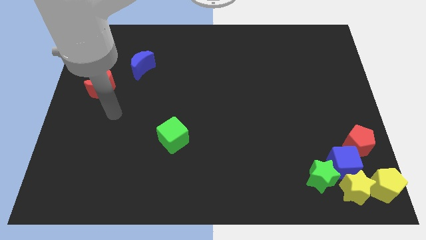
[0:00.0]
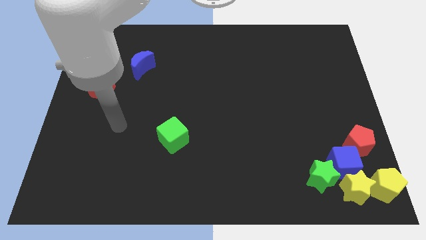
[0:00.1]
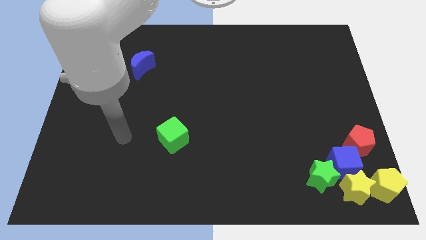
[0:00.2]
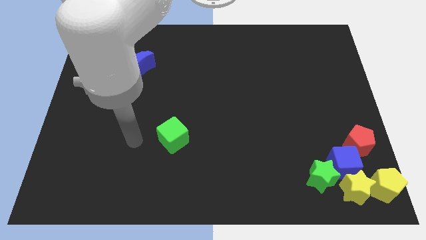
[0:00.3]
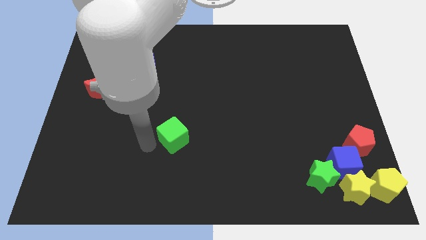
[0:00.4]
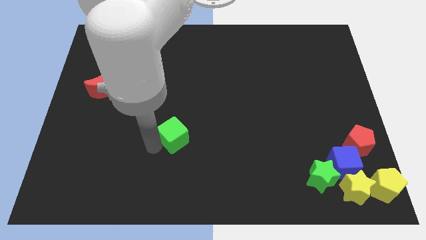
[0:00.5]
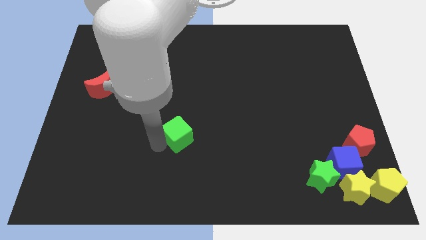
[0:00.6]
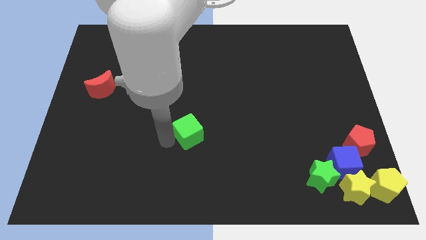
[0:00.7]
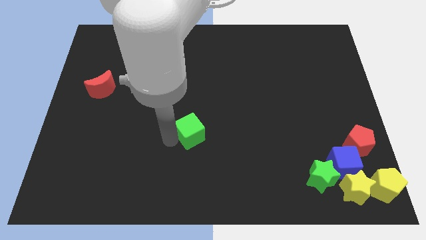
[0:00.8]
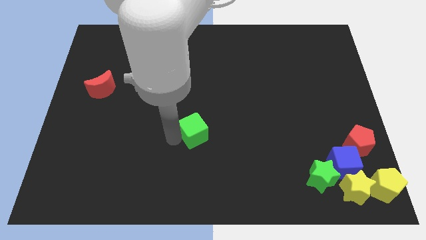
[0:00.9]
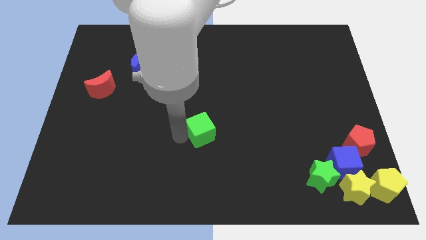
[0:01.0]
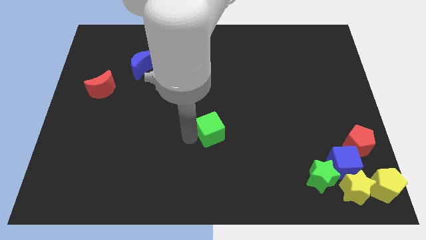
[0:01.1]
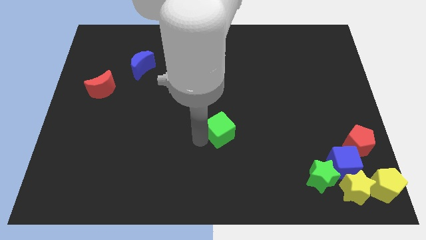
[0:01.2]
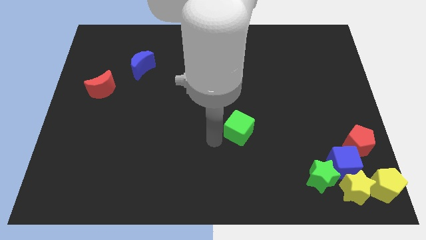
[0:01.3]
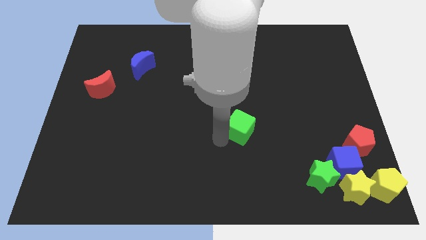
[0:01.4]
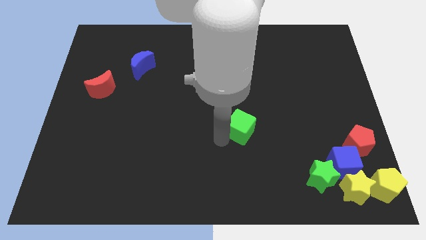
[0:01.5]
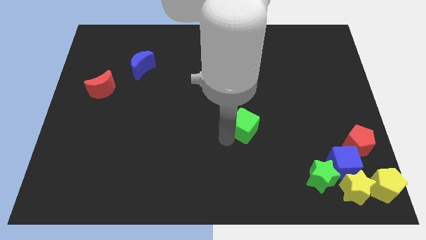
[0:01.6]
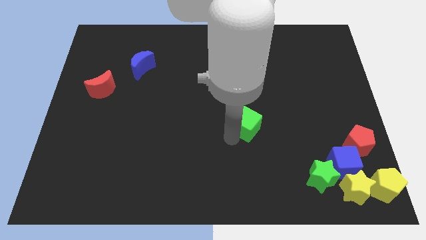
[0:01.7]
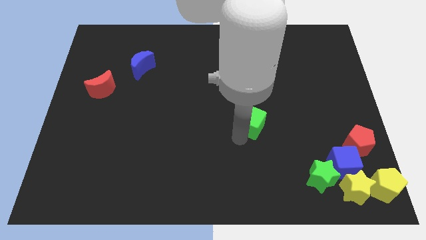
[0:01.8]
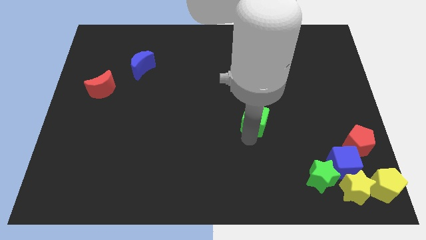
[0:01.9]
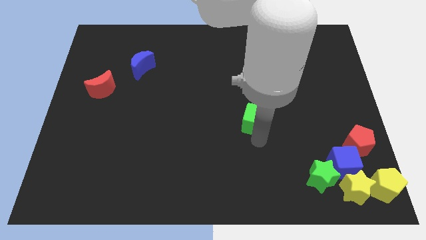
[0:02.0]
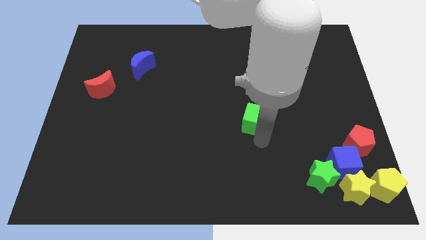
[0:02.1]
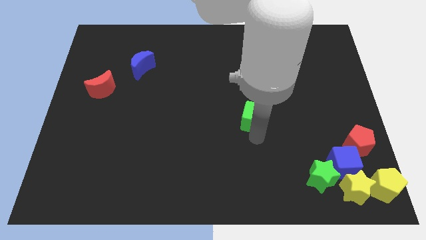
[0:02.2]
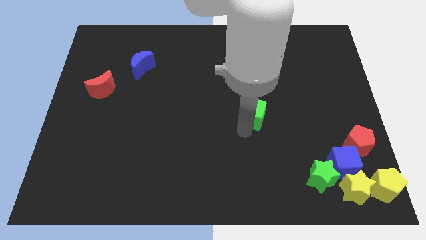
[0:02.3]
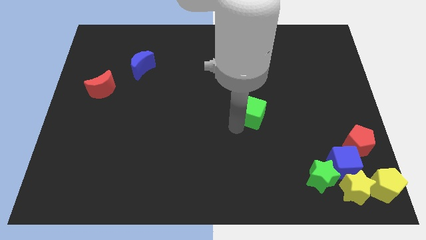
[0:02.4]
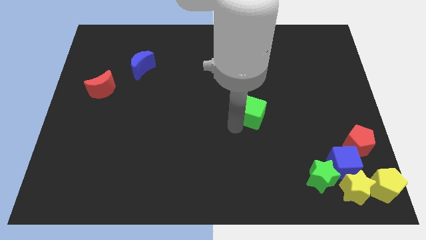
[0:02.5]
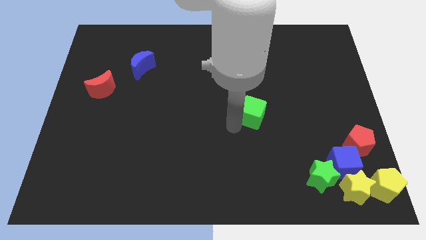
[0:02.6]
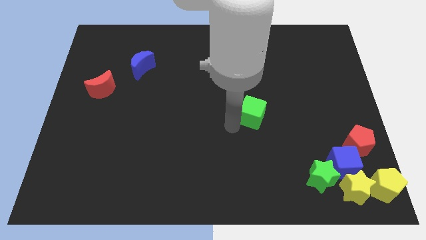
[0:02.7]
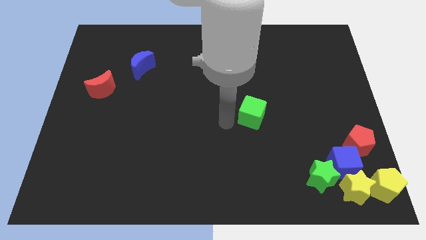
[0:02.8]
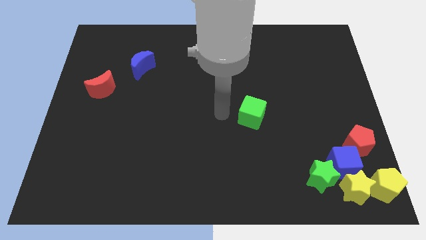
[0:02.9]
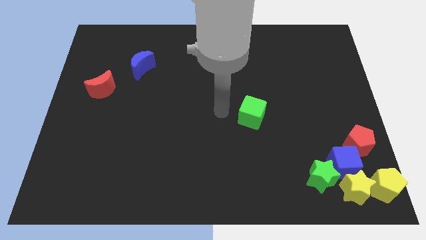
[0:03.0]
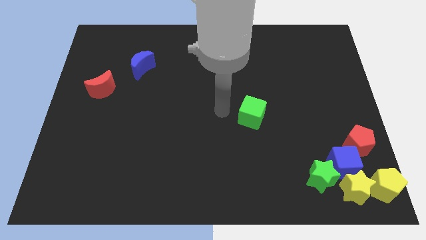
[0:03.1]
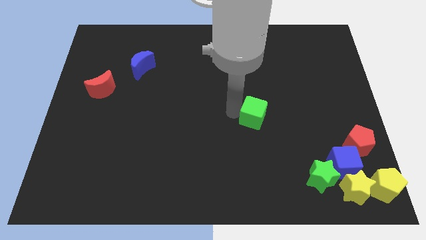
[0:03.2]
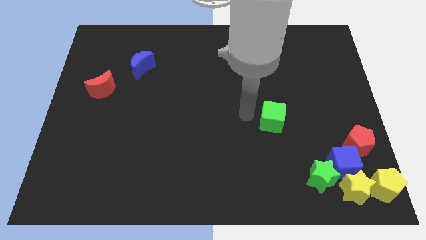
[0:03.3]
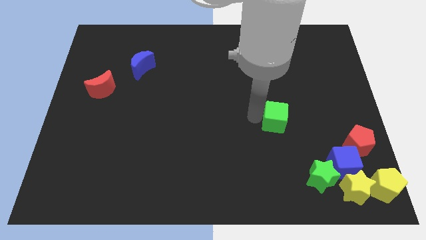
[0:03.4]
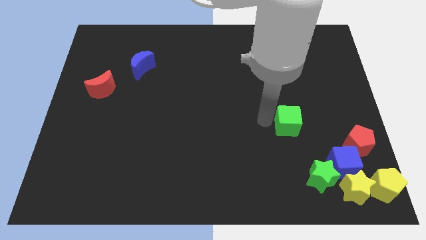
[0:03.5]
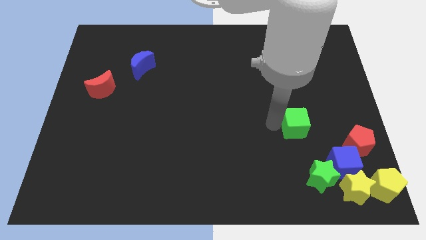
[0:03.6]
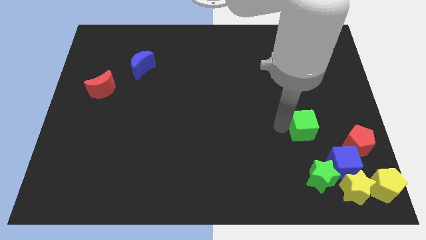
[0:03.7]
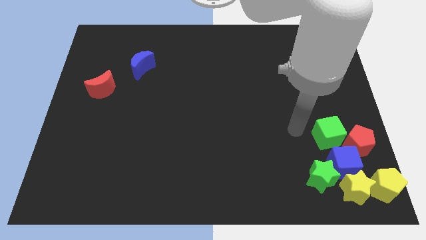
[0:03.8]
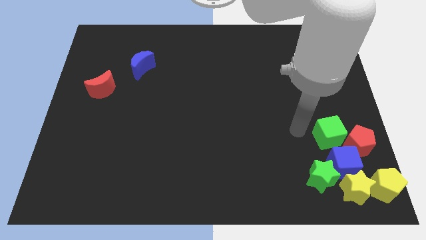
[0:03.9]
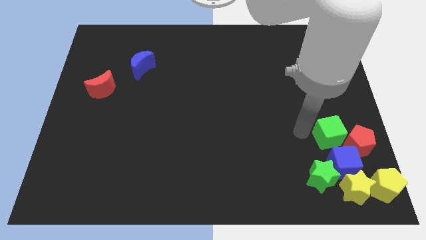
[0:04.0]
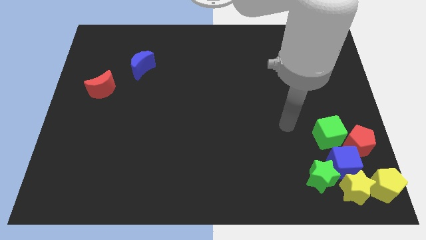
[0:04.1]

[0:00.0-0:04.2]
move the green cube to the top left of the red pentagon

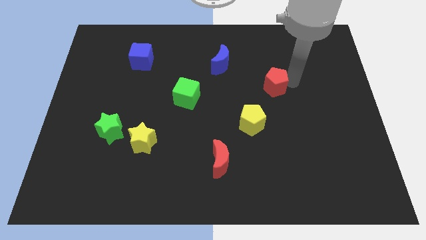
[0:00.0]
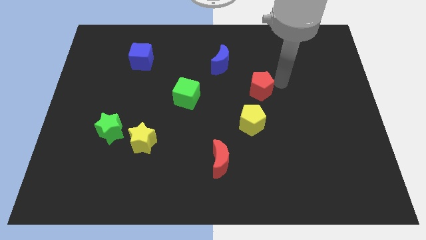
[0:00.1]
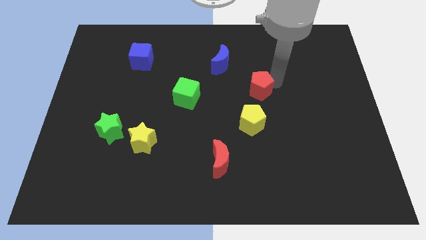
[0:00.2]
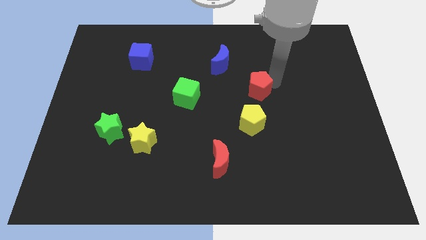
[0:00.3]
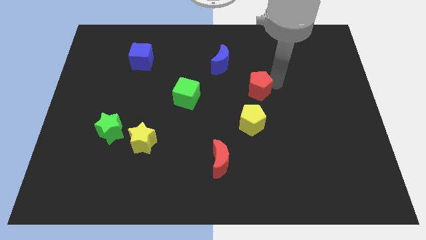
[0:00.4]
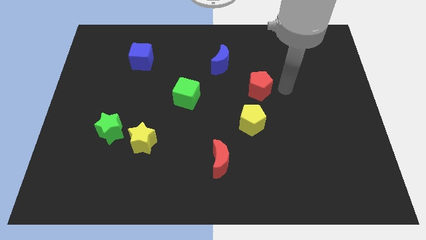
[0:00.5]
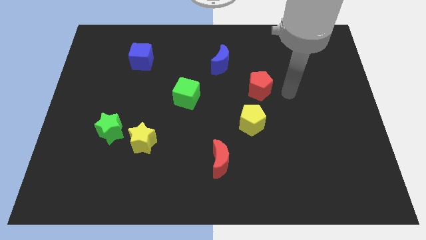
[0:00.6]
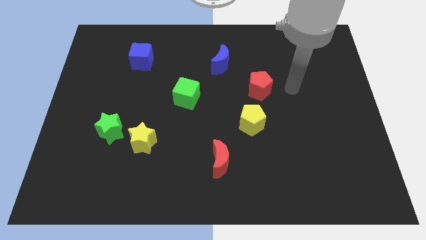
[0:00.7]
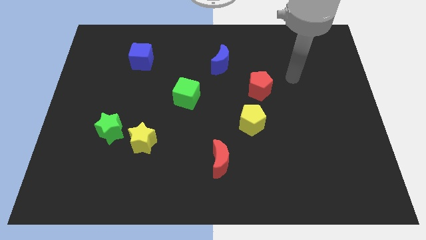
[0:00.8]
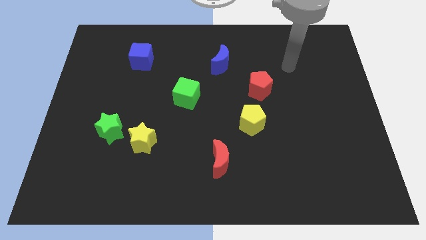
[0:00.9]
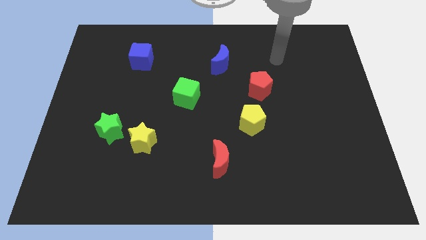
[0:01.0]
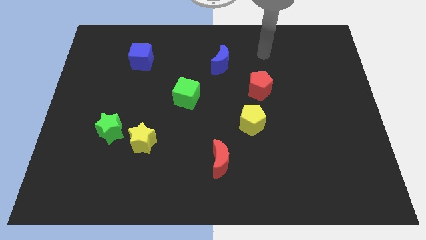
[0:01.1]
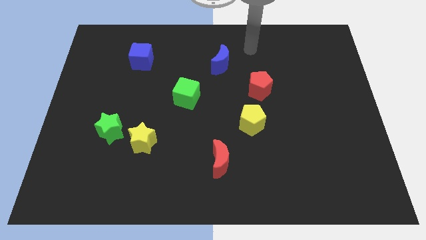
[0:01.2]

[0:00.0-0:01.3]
move red pentagon above yellow pentagon

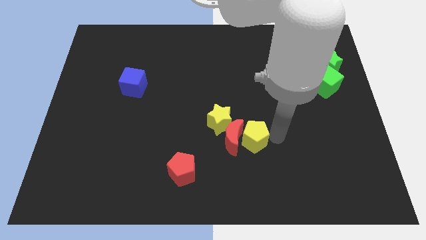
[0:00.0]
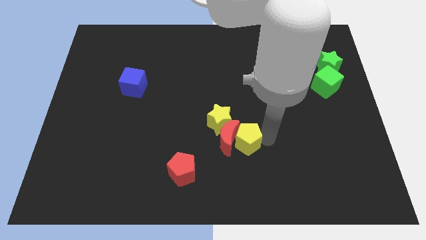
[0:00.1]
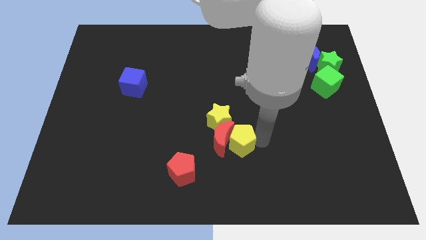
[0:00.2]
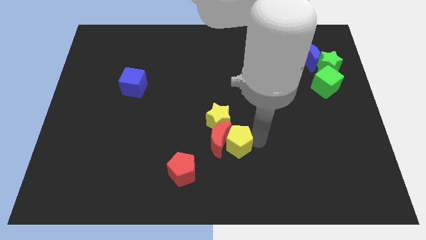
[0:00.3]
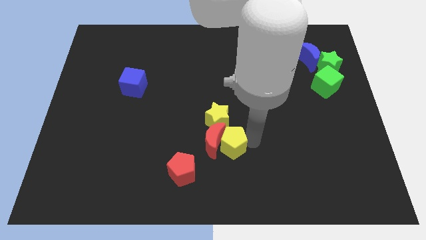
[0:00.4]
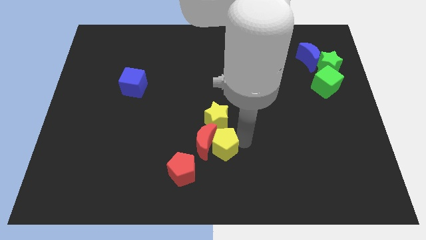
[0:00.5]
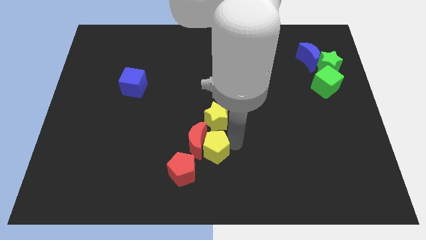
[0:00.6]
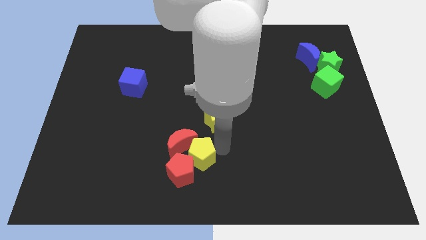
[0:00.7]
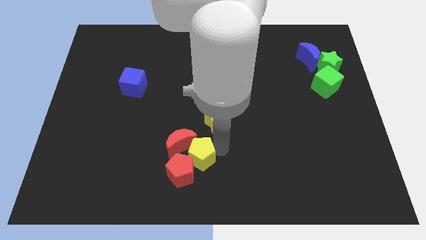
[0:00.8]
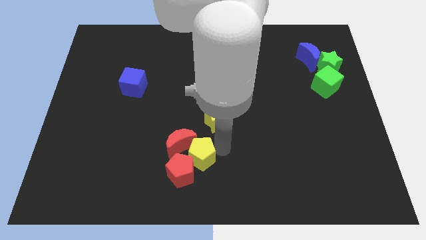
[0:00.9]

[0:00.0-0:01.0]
push the red moon and yellow pentagon to the left side of the board

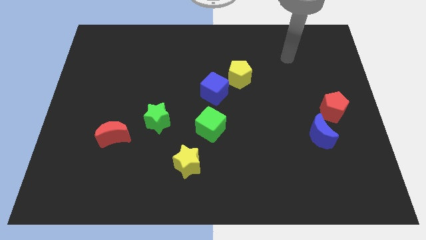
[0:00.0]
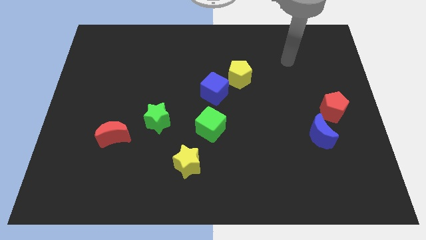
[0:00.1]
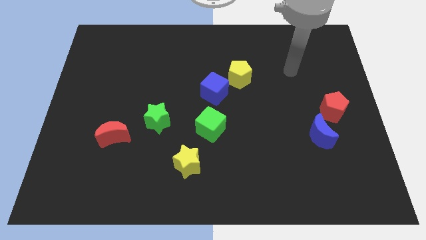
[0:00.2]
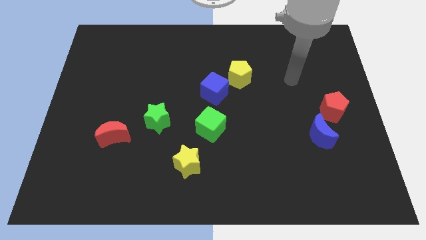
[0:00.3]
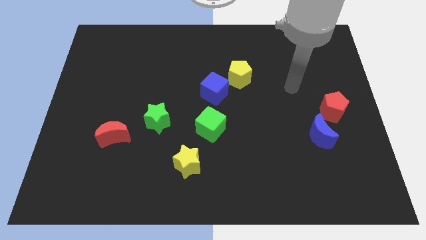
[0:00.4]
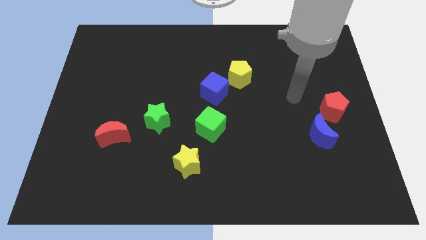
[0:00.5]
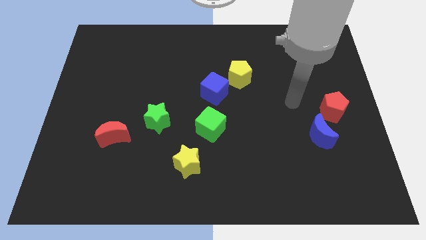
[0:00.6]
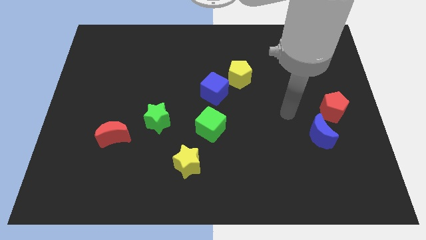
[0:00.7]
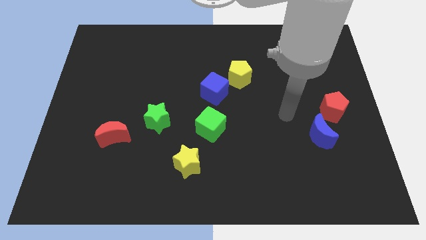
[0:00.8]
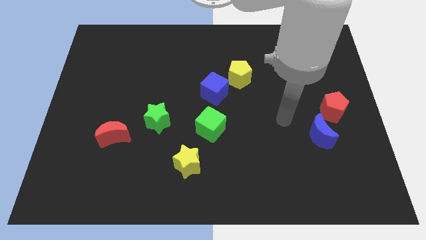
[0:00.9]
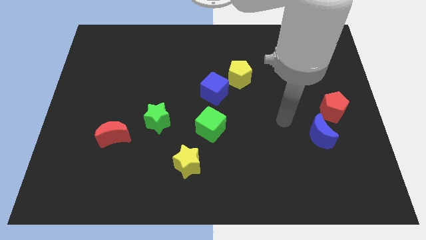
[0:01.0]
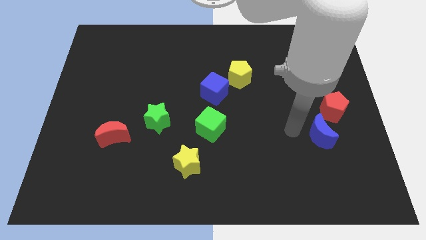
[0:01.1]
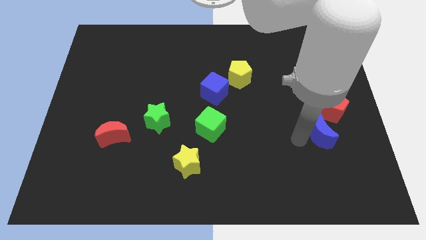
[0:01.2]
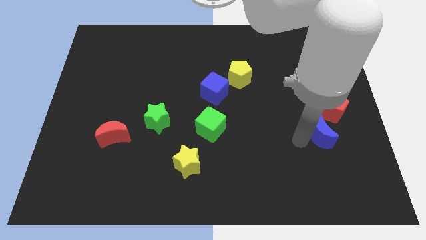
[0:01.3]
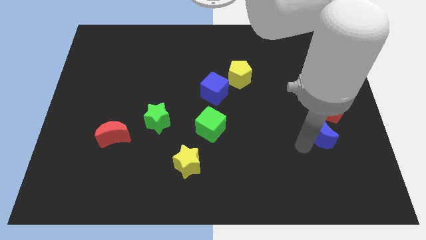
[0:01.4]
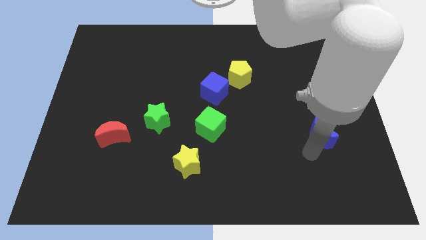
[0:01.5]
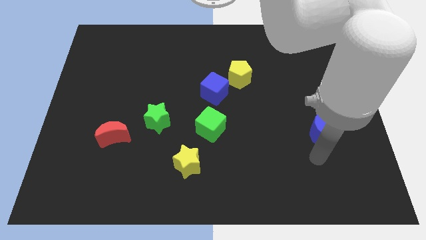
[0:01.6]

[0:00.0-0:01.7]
point your arm at the bottom side of the blue moon

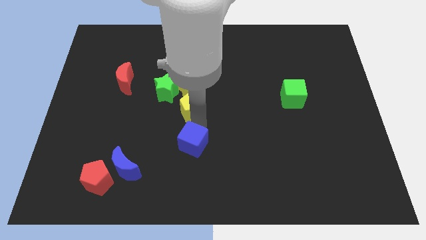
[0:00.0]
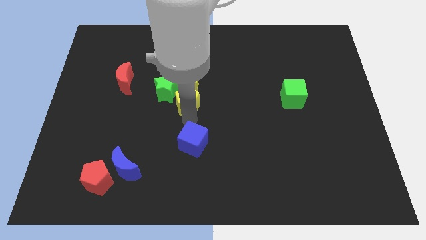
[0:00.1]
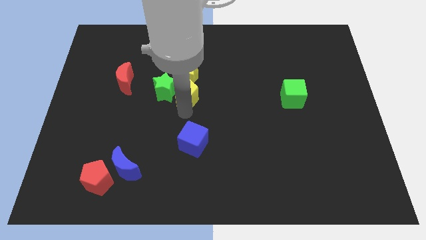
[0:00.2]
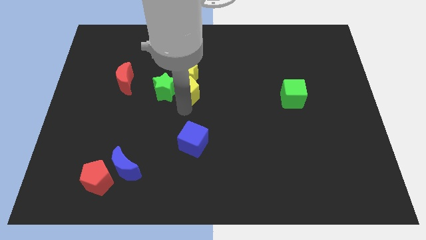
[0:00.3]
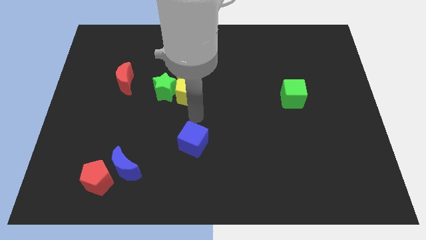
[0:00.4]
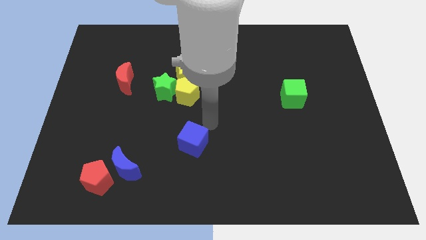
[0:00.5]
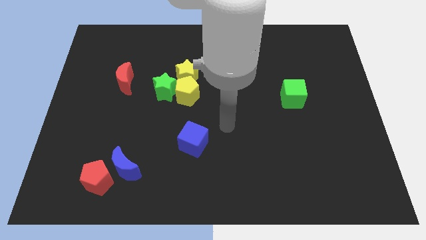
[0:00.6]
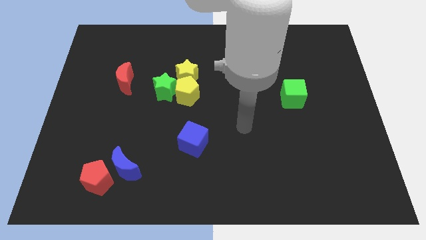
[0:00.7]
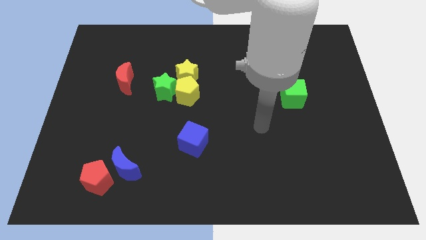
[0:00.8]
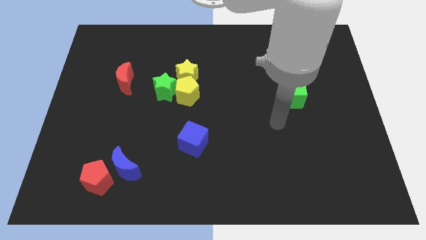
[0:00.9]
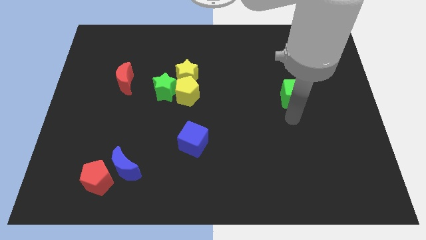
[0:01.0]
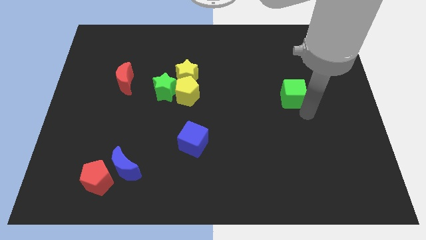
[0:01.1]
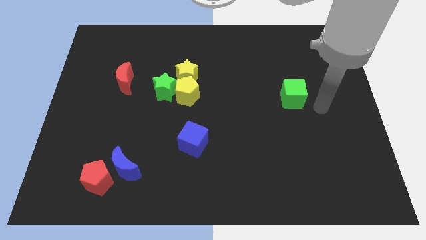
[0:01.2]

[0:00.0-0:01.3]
push the yellow pentagon into the green and yellow stars
